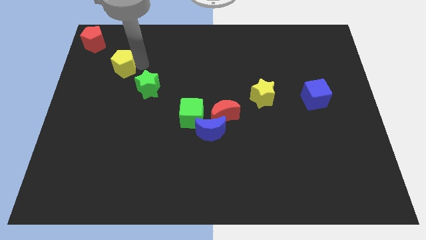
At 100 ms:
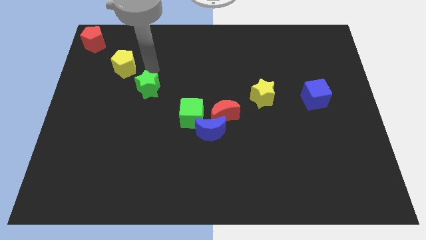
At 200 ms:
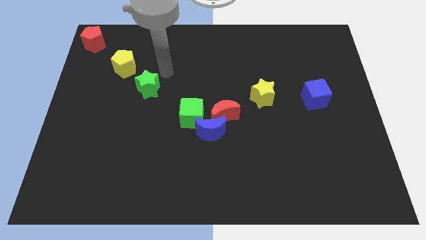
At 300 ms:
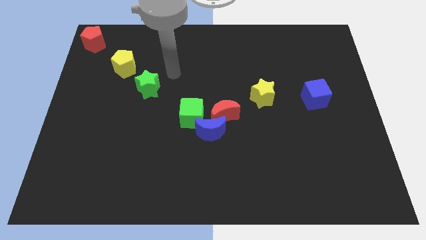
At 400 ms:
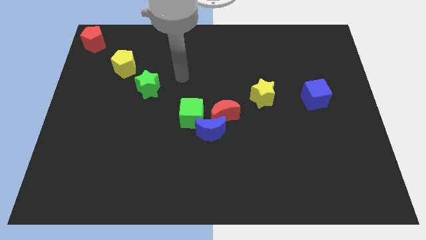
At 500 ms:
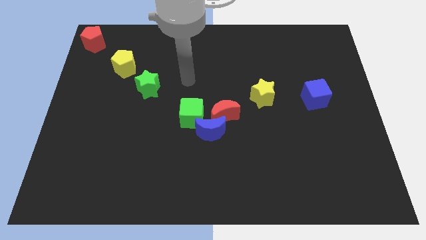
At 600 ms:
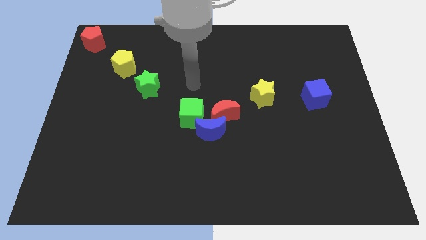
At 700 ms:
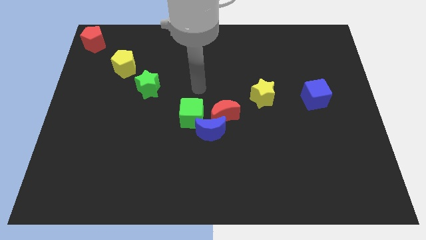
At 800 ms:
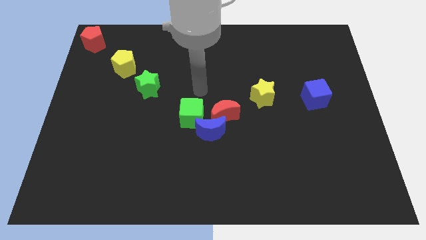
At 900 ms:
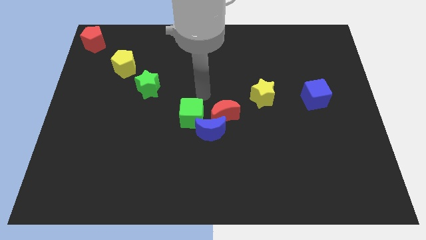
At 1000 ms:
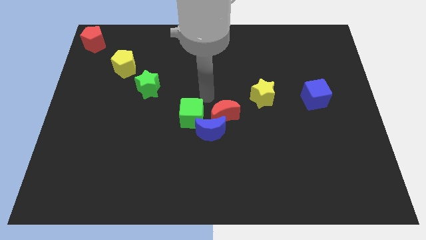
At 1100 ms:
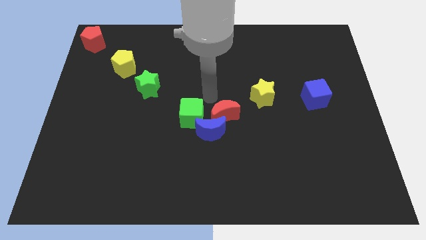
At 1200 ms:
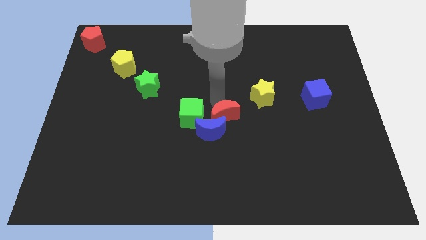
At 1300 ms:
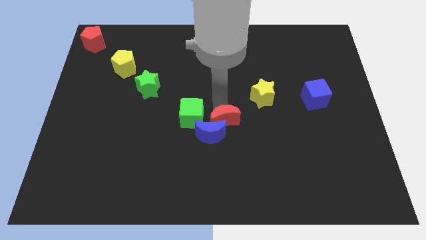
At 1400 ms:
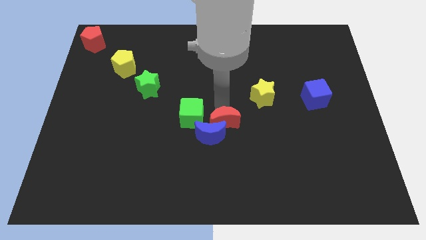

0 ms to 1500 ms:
place the arm above the red moon

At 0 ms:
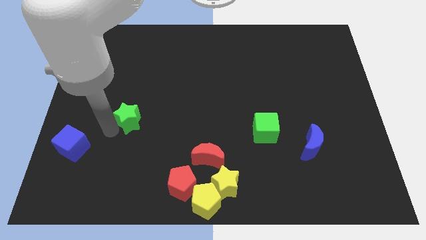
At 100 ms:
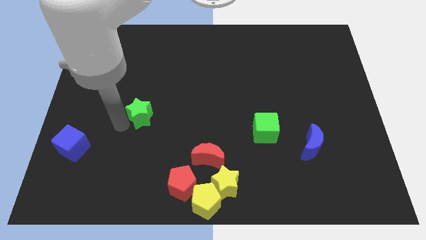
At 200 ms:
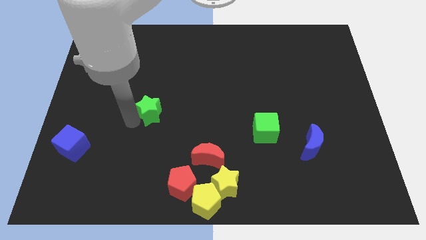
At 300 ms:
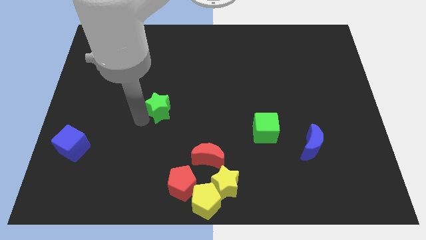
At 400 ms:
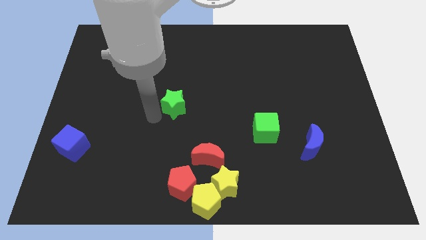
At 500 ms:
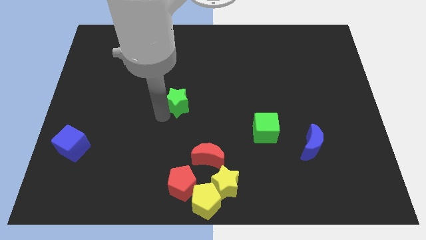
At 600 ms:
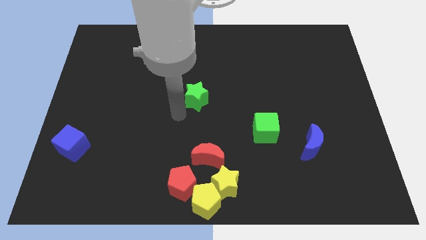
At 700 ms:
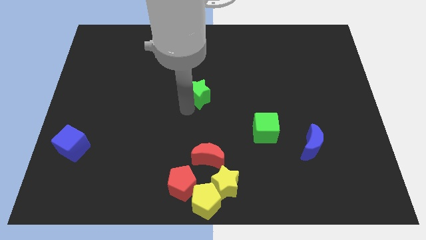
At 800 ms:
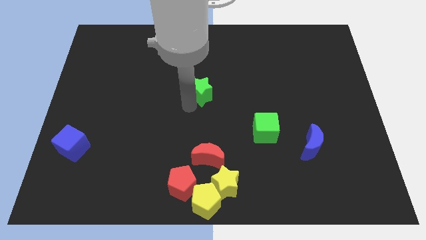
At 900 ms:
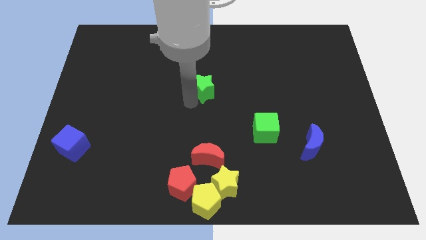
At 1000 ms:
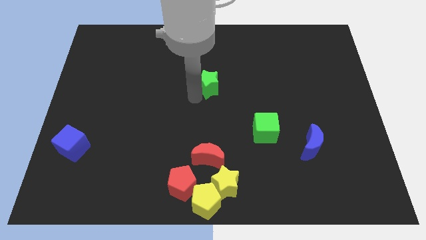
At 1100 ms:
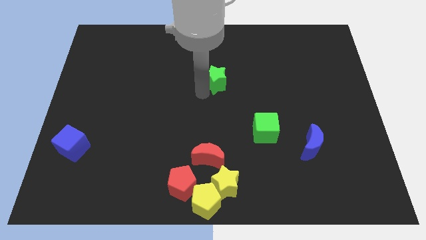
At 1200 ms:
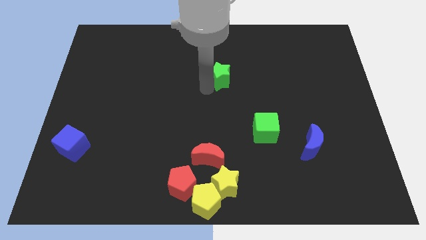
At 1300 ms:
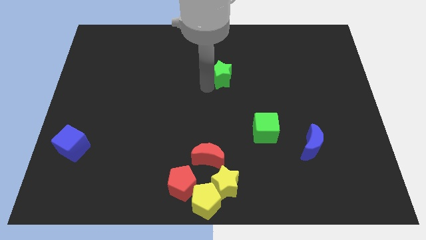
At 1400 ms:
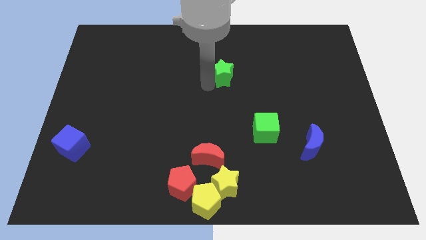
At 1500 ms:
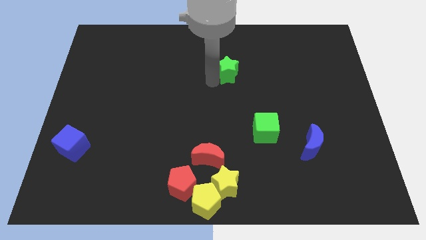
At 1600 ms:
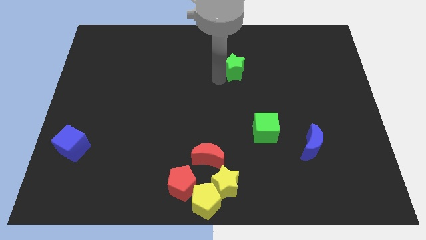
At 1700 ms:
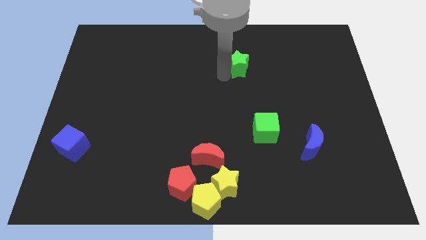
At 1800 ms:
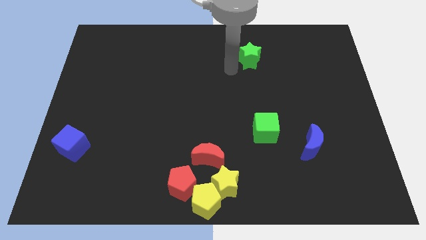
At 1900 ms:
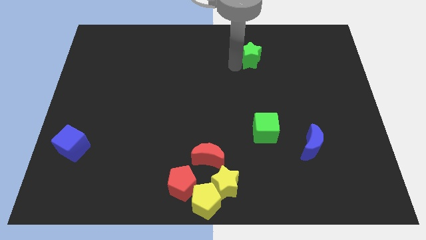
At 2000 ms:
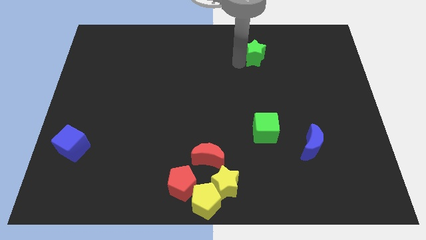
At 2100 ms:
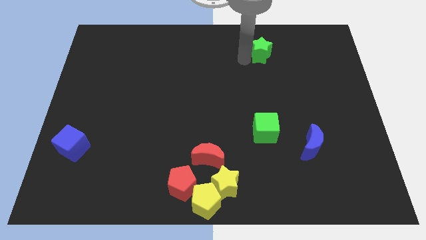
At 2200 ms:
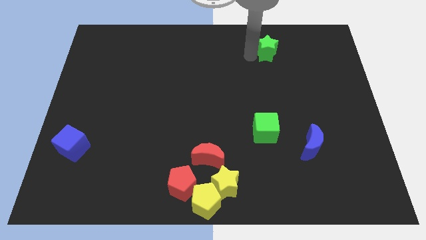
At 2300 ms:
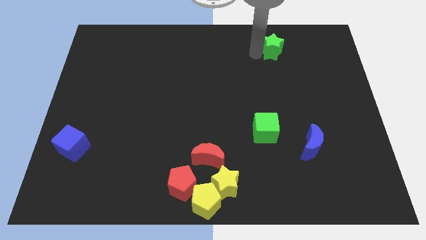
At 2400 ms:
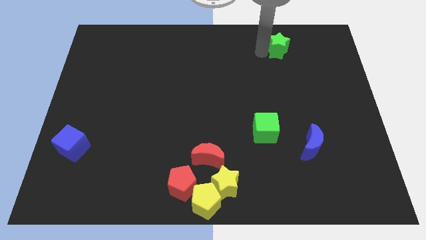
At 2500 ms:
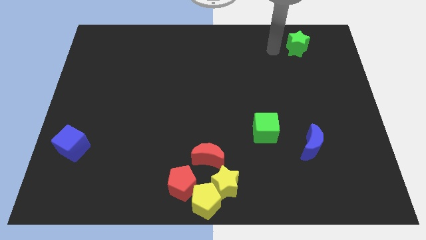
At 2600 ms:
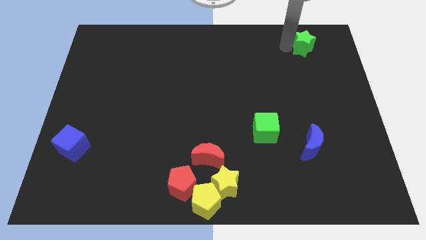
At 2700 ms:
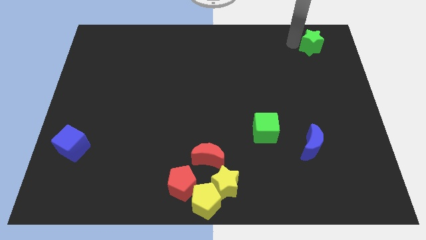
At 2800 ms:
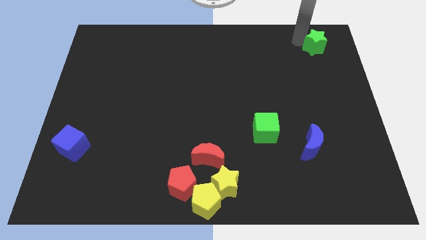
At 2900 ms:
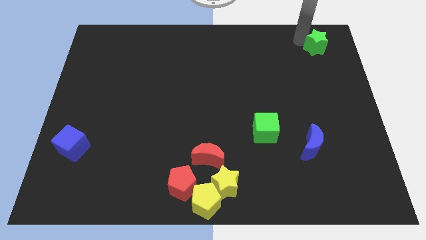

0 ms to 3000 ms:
place the green star vertically at the top side of the blue moon

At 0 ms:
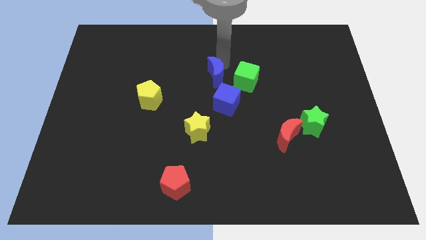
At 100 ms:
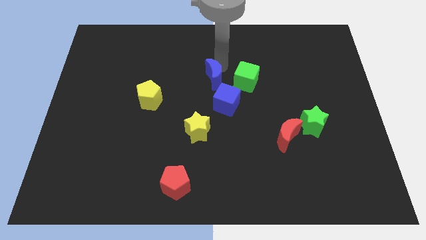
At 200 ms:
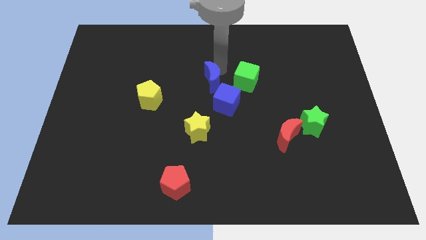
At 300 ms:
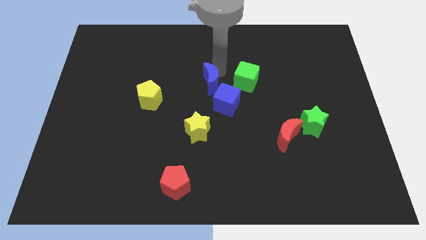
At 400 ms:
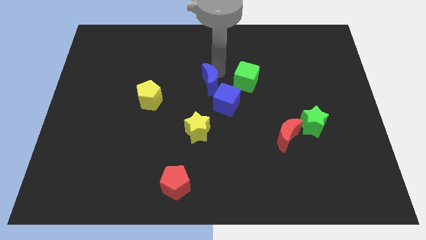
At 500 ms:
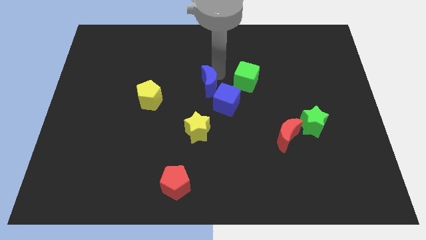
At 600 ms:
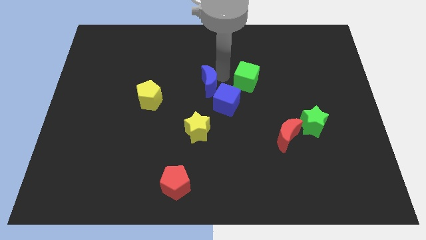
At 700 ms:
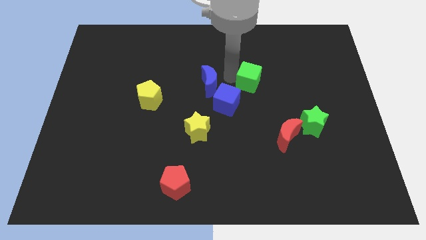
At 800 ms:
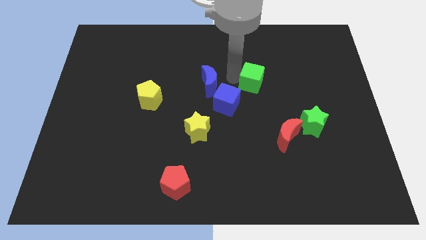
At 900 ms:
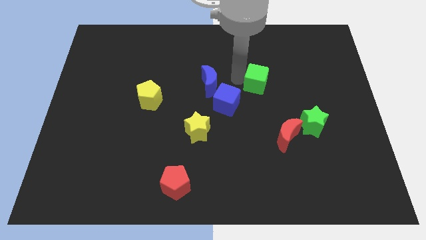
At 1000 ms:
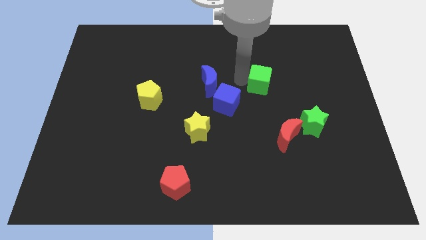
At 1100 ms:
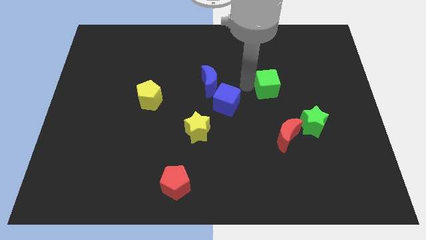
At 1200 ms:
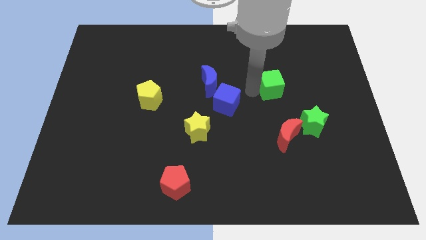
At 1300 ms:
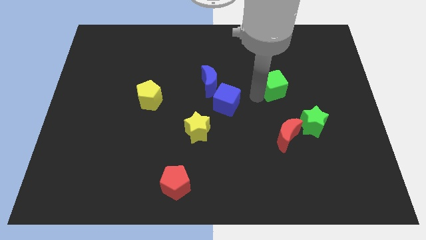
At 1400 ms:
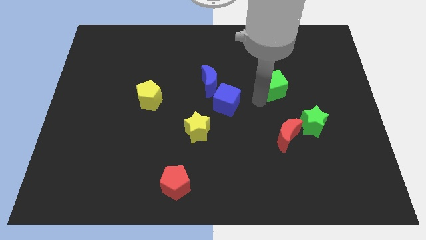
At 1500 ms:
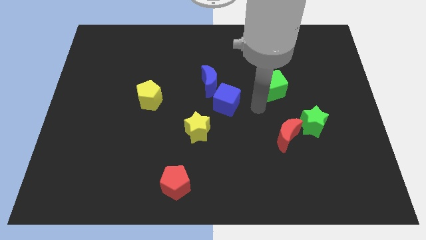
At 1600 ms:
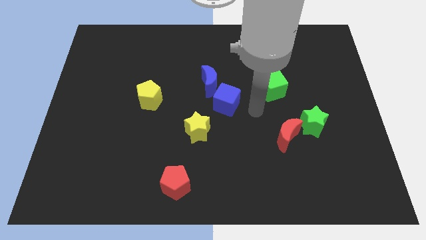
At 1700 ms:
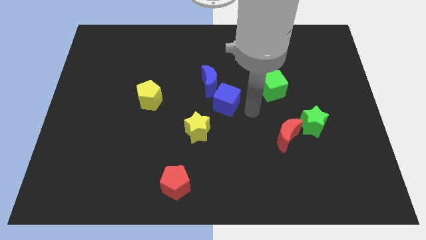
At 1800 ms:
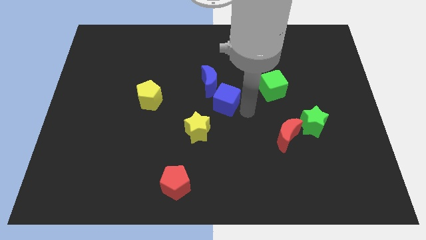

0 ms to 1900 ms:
move the green cube towards the green star

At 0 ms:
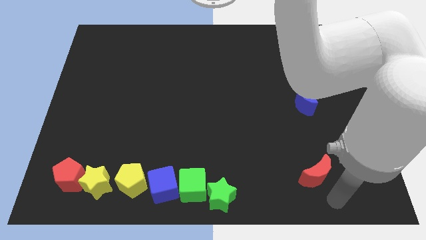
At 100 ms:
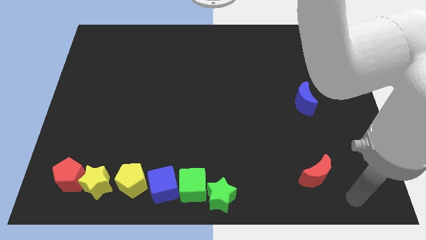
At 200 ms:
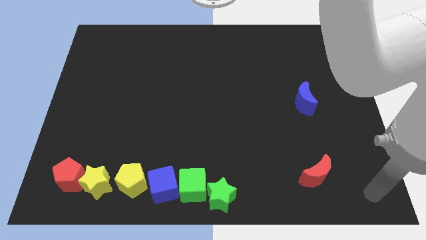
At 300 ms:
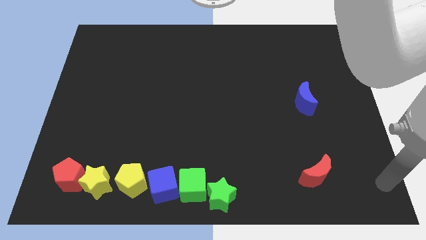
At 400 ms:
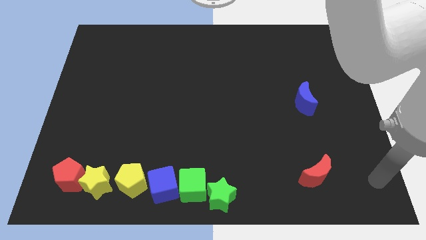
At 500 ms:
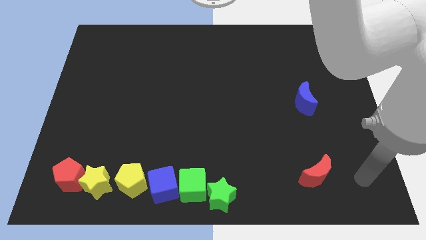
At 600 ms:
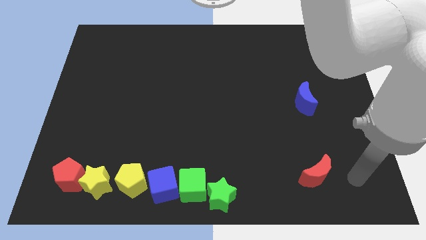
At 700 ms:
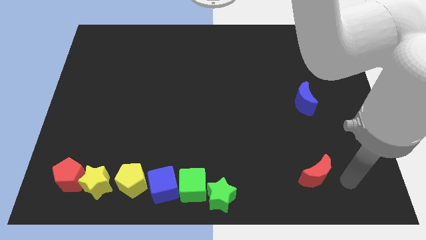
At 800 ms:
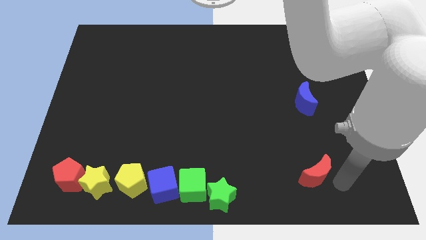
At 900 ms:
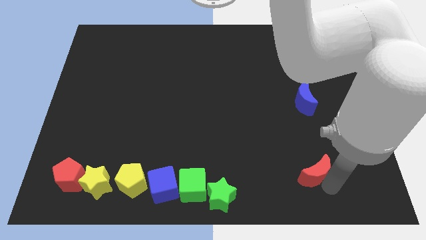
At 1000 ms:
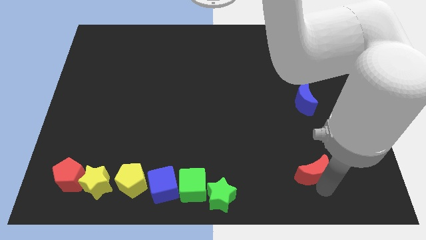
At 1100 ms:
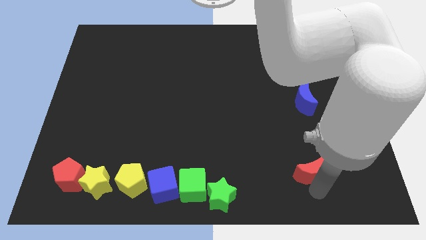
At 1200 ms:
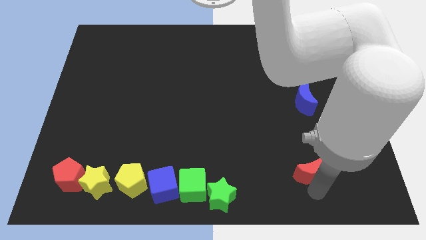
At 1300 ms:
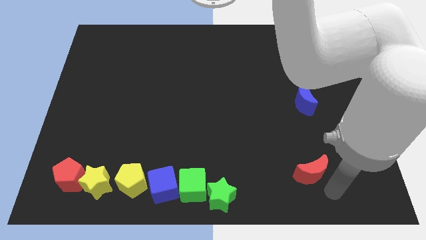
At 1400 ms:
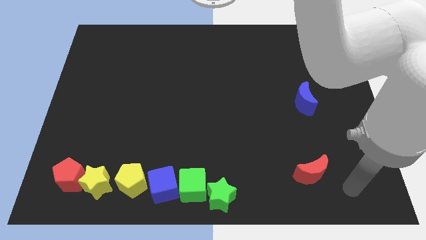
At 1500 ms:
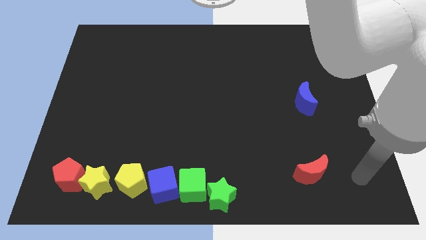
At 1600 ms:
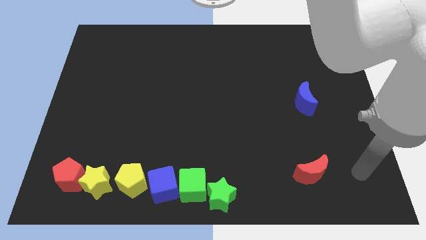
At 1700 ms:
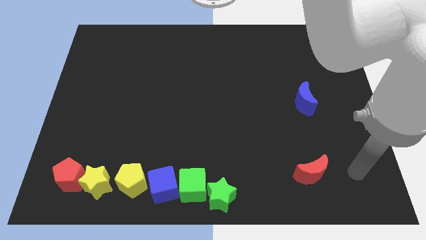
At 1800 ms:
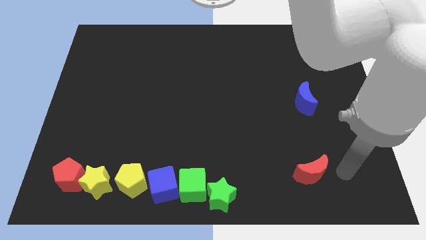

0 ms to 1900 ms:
slightly push the red crescent

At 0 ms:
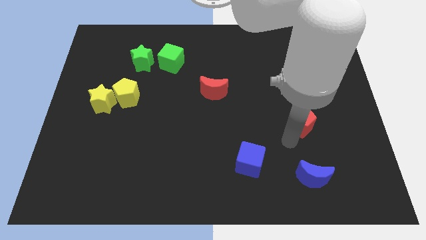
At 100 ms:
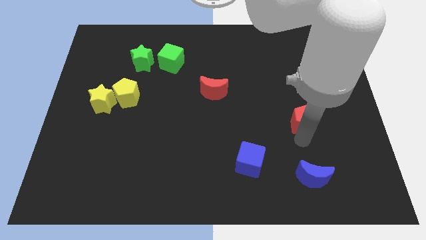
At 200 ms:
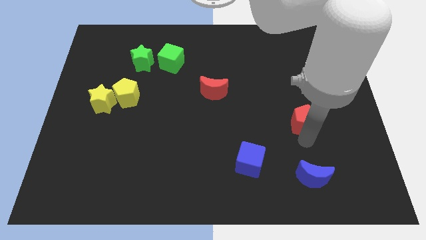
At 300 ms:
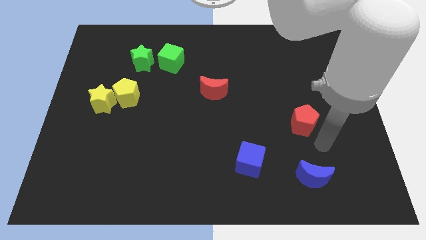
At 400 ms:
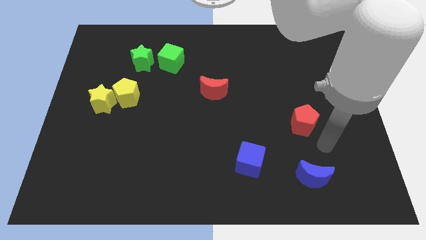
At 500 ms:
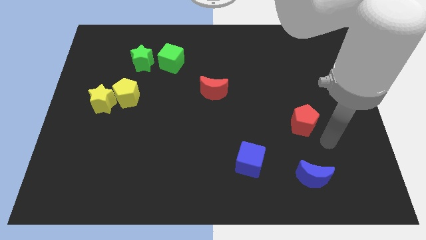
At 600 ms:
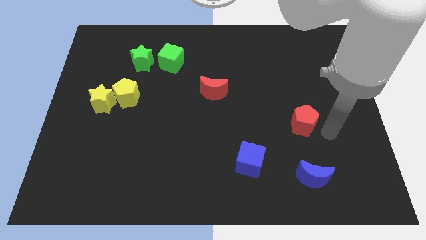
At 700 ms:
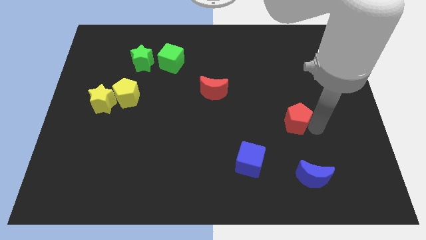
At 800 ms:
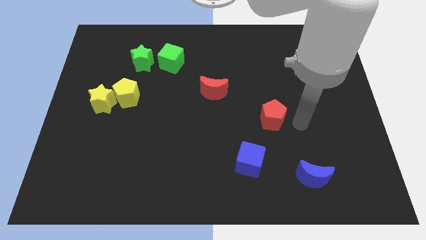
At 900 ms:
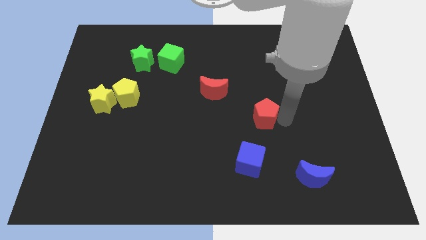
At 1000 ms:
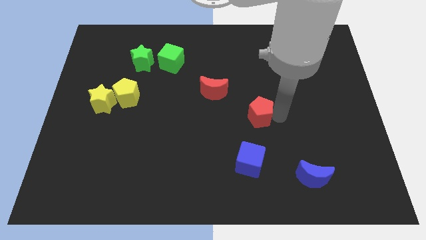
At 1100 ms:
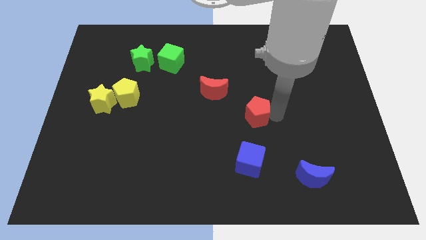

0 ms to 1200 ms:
move the red pentagon slightly to the left
